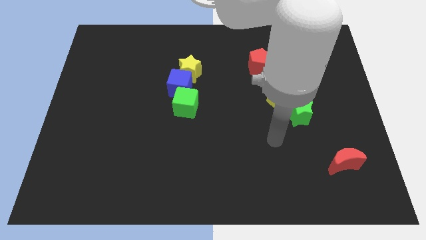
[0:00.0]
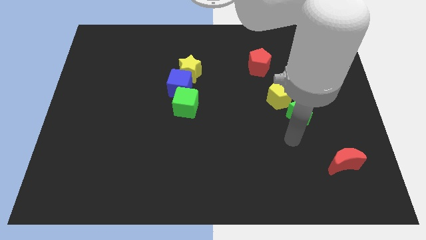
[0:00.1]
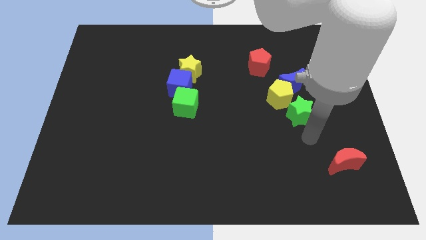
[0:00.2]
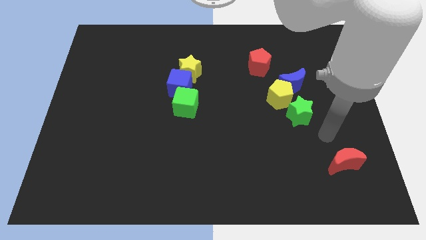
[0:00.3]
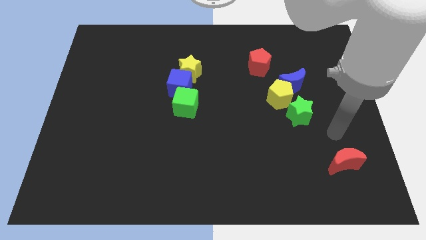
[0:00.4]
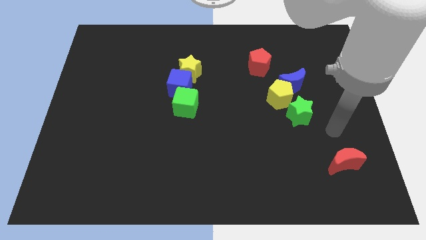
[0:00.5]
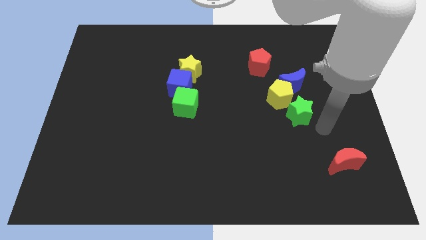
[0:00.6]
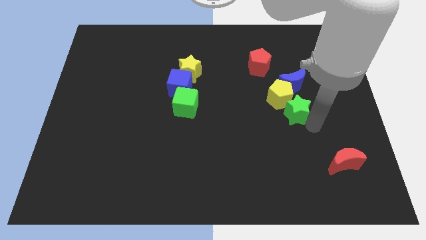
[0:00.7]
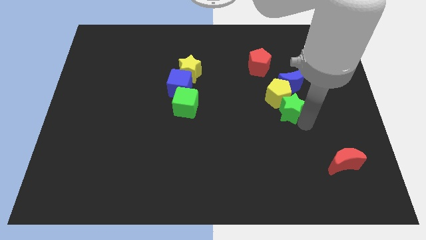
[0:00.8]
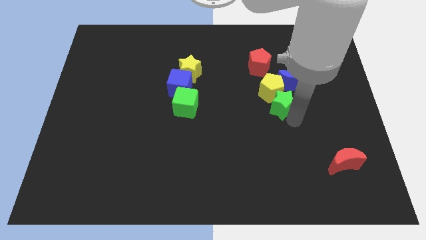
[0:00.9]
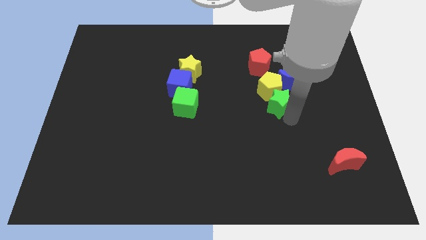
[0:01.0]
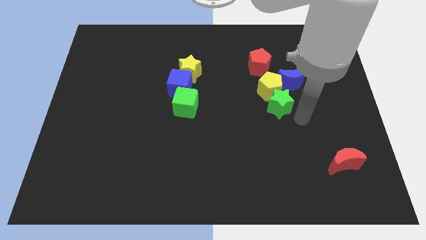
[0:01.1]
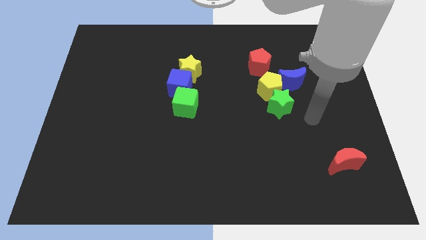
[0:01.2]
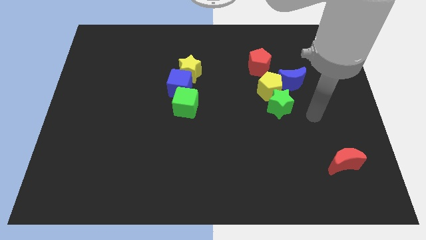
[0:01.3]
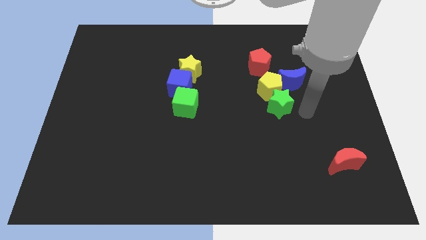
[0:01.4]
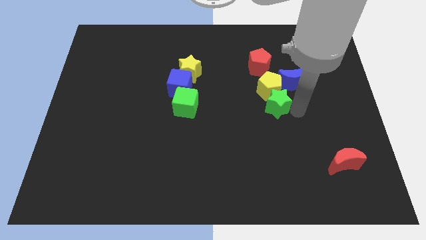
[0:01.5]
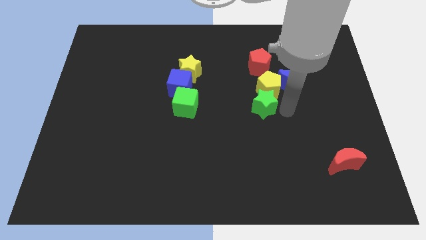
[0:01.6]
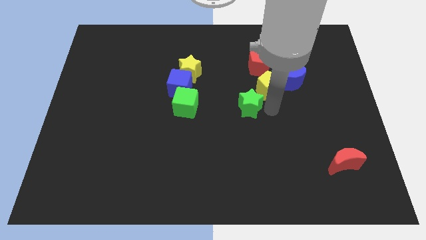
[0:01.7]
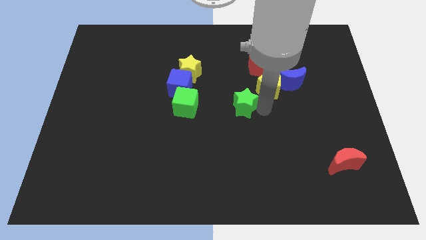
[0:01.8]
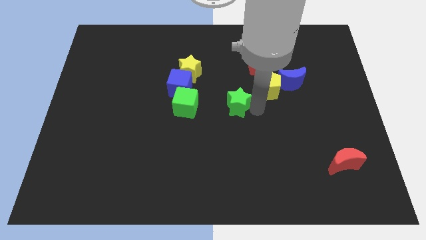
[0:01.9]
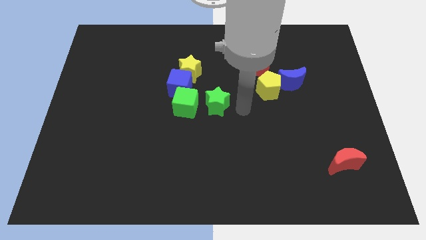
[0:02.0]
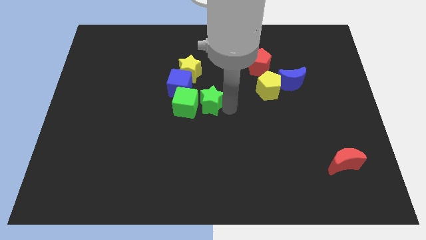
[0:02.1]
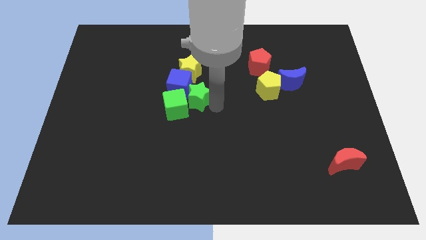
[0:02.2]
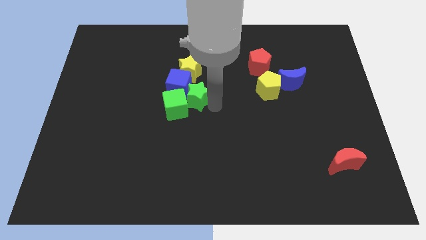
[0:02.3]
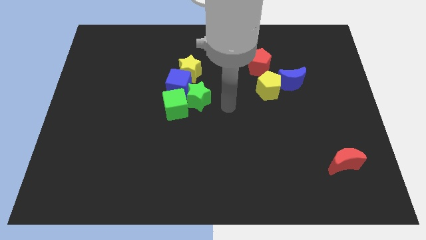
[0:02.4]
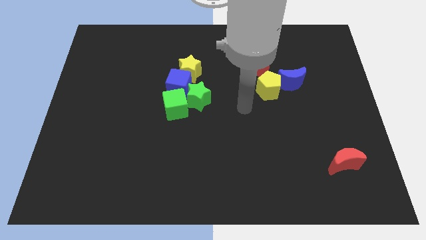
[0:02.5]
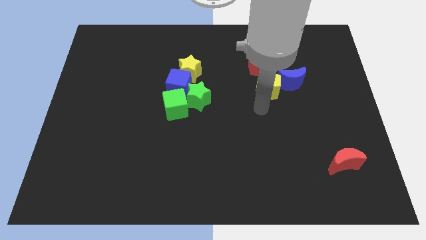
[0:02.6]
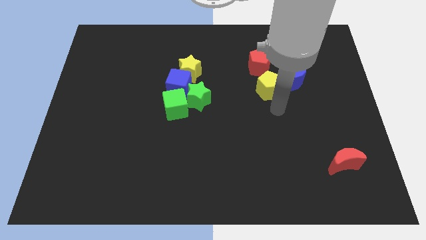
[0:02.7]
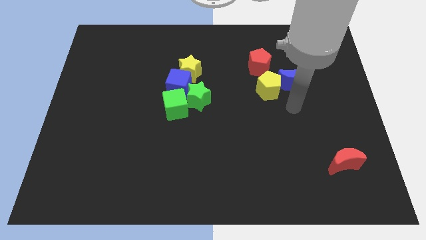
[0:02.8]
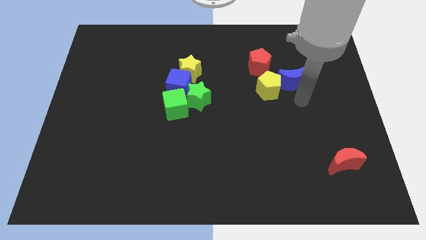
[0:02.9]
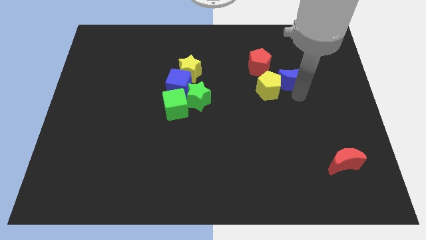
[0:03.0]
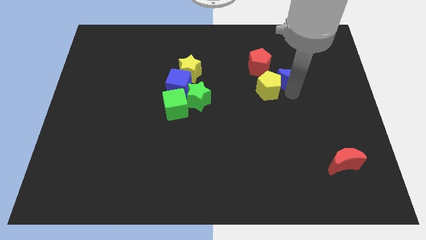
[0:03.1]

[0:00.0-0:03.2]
slide the green star to the top right side of the green cube

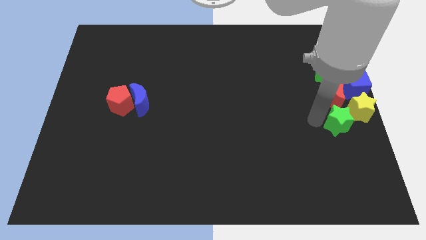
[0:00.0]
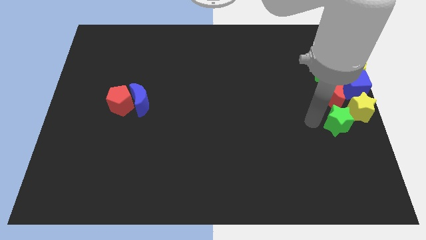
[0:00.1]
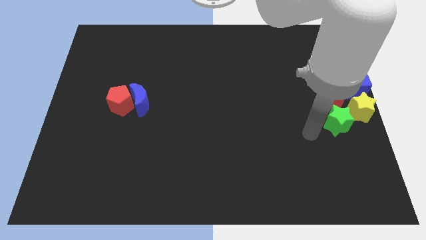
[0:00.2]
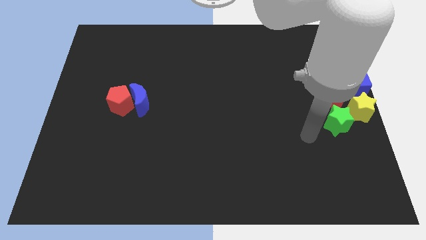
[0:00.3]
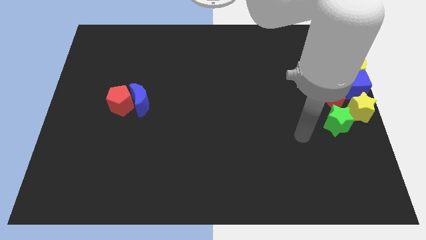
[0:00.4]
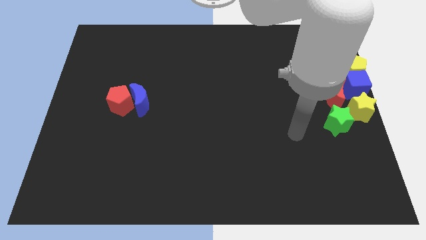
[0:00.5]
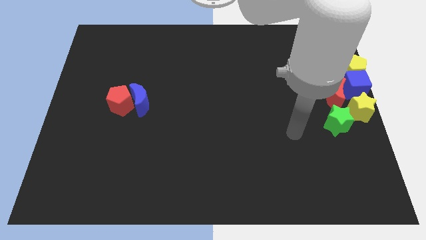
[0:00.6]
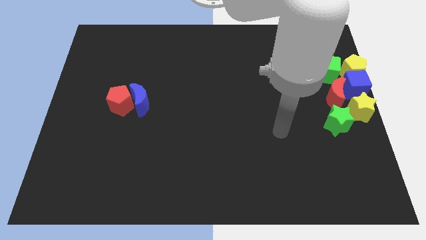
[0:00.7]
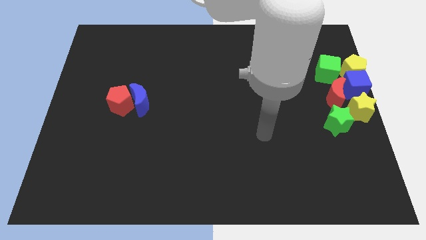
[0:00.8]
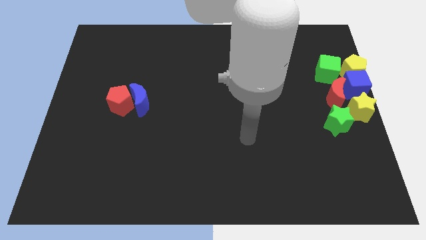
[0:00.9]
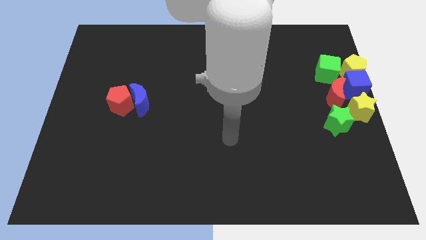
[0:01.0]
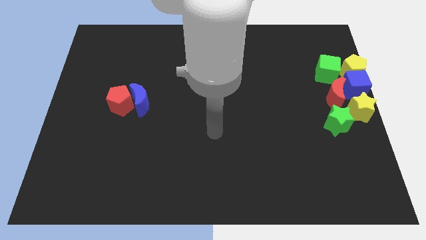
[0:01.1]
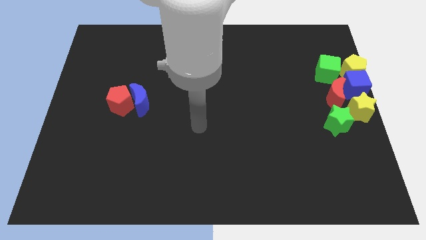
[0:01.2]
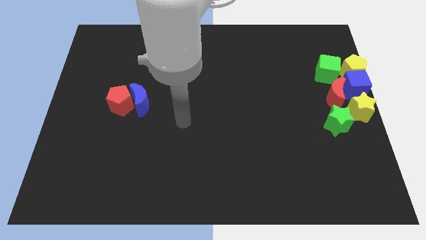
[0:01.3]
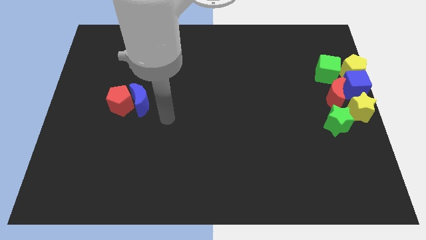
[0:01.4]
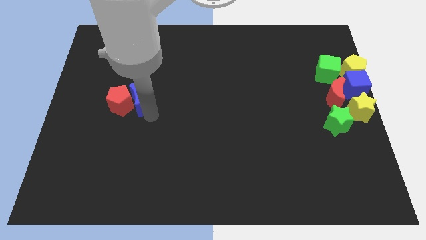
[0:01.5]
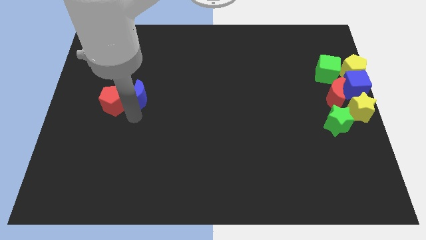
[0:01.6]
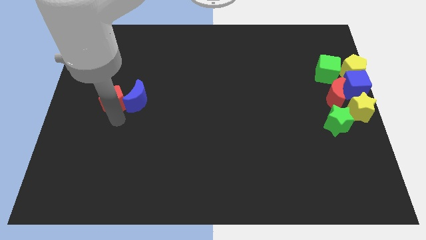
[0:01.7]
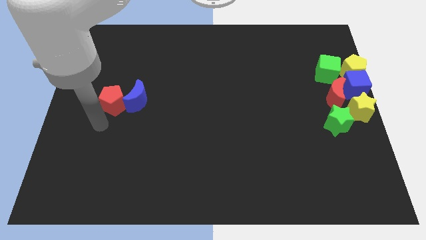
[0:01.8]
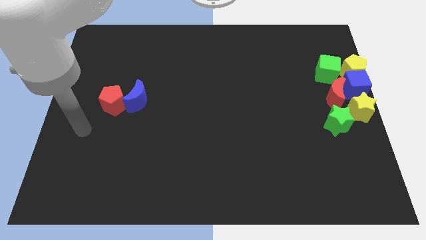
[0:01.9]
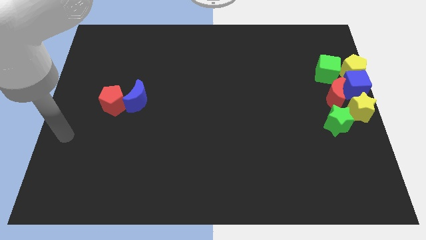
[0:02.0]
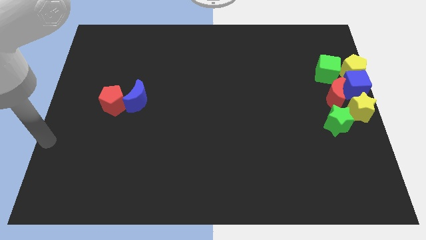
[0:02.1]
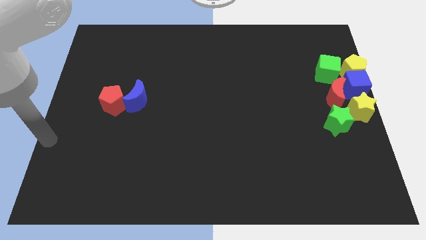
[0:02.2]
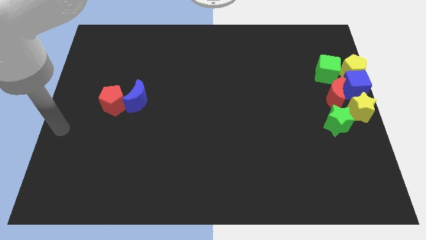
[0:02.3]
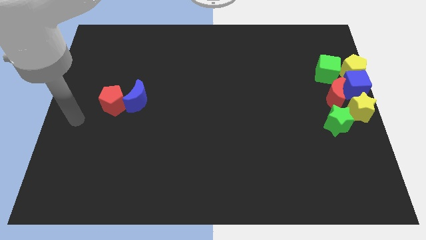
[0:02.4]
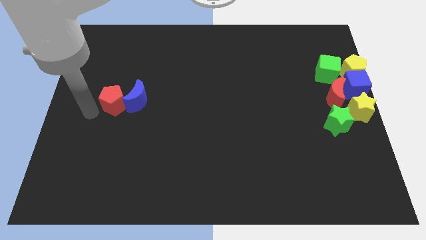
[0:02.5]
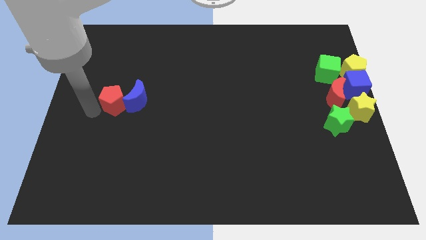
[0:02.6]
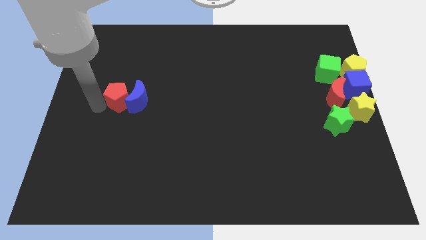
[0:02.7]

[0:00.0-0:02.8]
move your arm towards the red pentagon

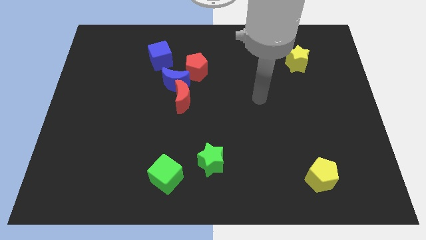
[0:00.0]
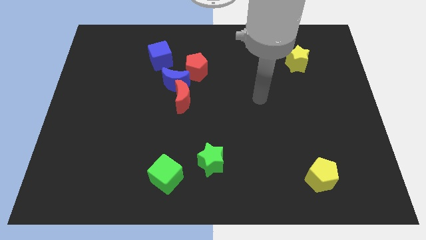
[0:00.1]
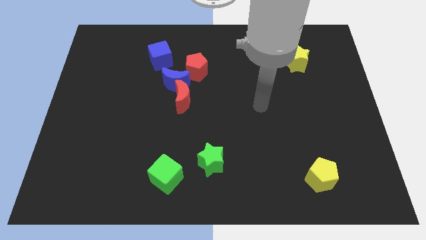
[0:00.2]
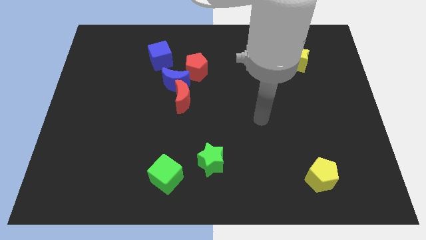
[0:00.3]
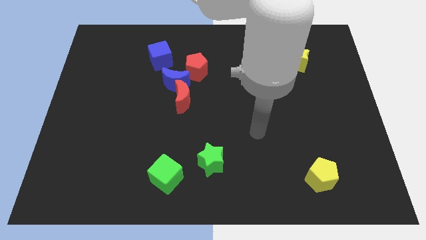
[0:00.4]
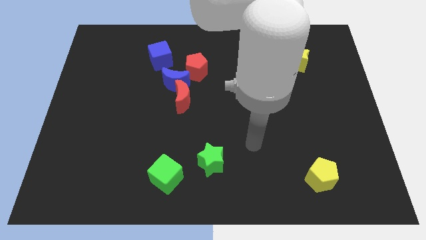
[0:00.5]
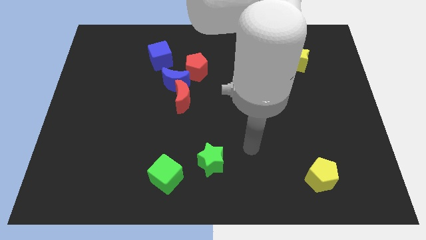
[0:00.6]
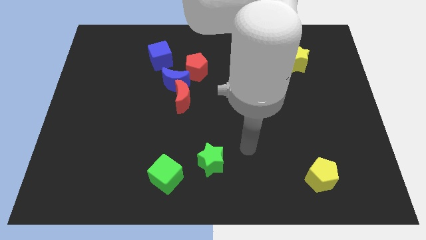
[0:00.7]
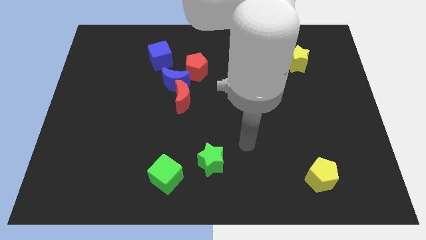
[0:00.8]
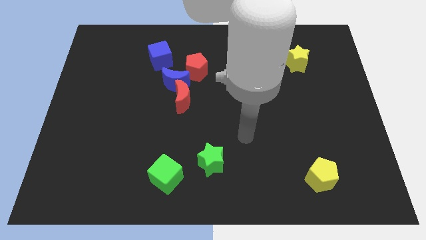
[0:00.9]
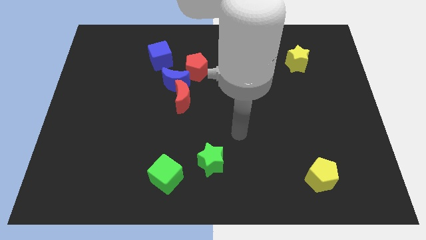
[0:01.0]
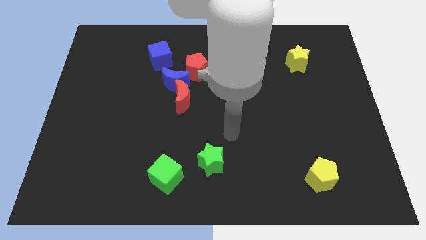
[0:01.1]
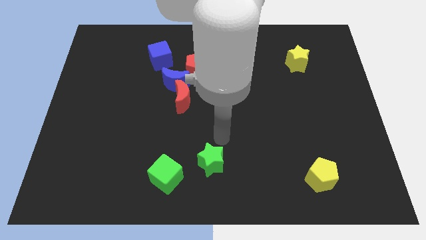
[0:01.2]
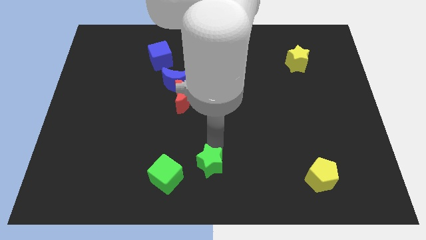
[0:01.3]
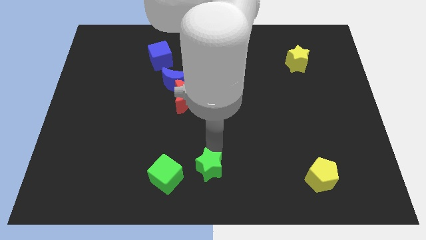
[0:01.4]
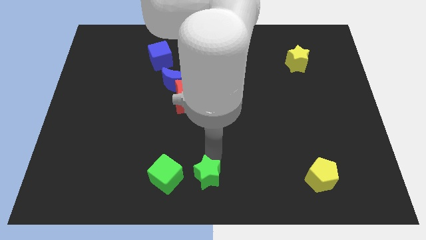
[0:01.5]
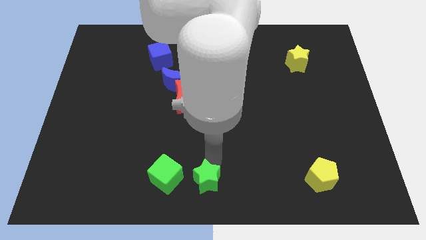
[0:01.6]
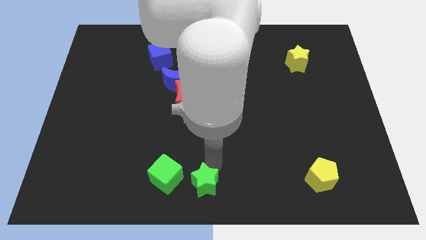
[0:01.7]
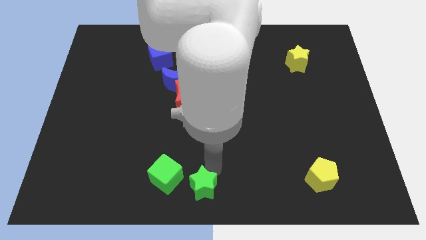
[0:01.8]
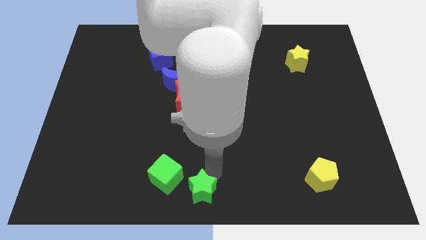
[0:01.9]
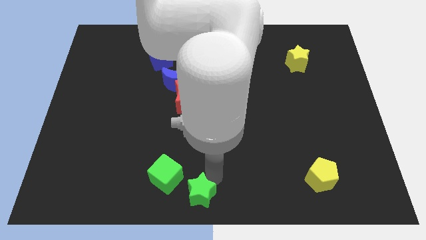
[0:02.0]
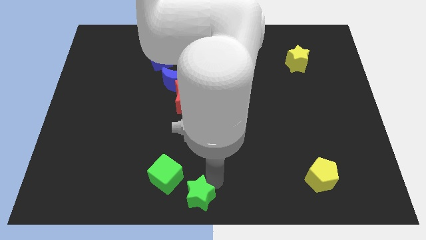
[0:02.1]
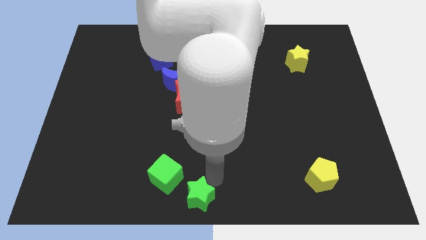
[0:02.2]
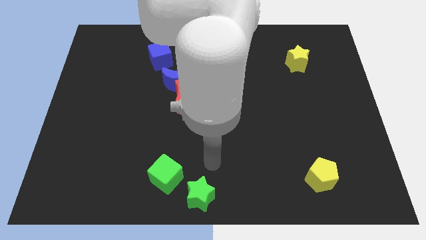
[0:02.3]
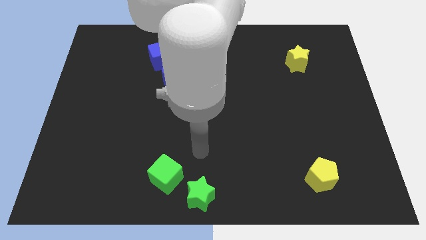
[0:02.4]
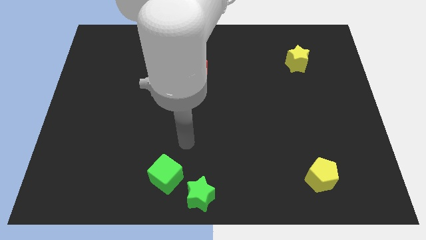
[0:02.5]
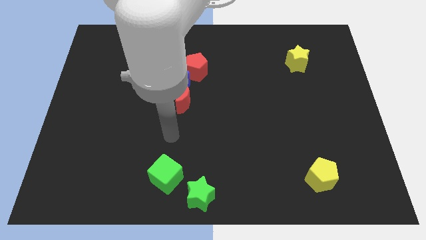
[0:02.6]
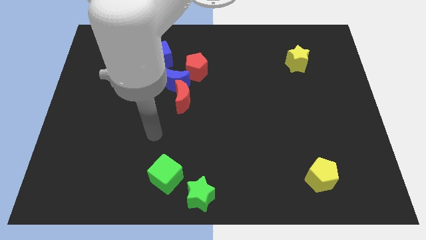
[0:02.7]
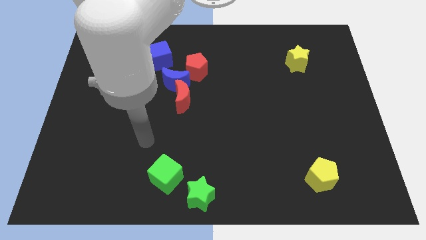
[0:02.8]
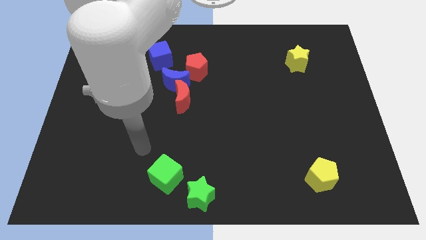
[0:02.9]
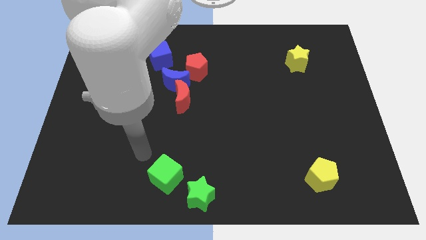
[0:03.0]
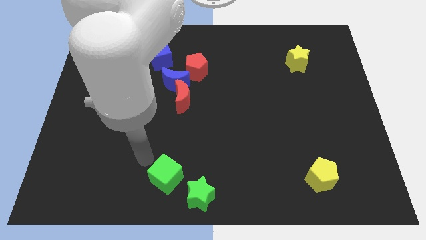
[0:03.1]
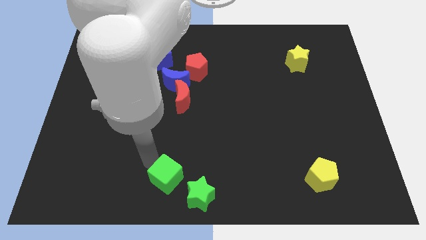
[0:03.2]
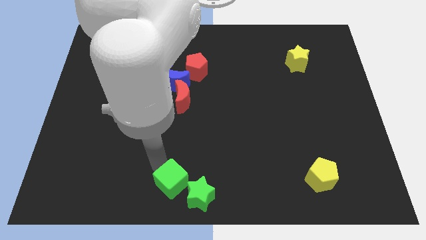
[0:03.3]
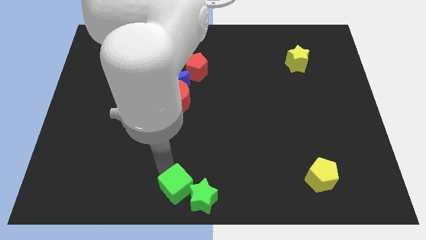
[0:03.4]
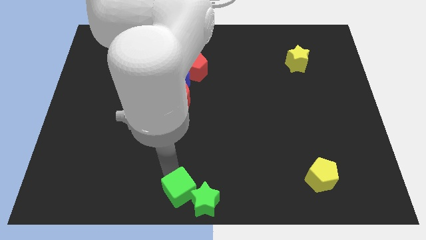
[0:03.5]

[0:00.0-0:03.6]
push the green blocks to the bottom middle of the board
